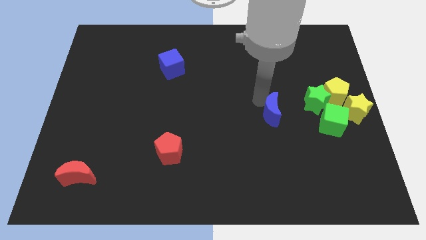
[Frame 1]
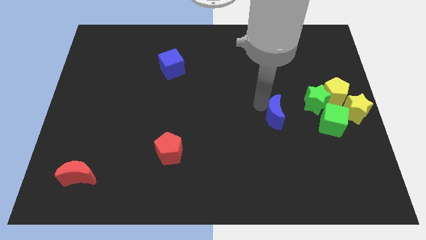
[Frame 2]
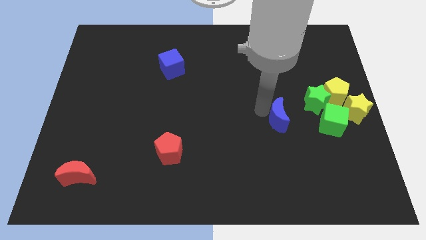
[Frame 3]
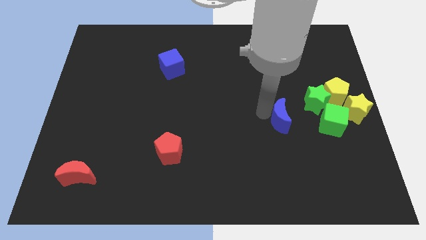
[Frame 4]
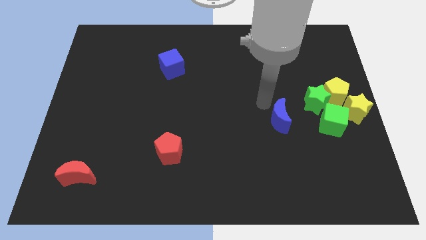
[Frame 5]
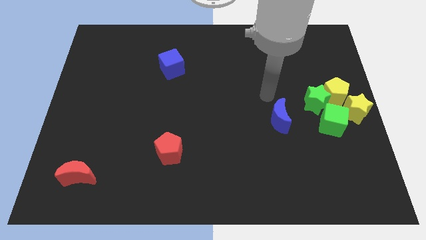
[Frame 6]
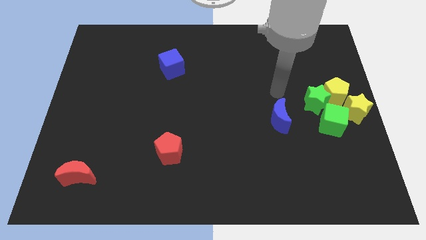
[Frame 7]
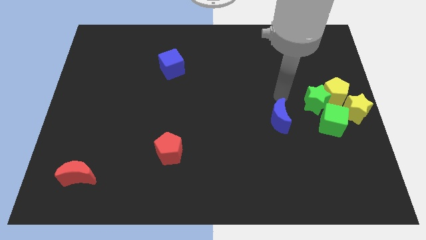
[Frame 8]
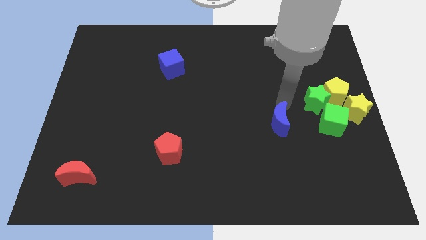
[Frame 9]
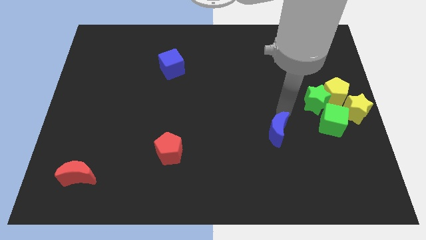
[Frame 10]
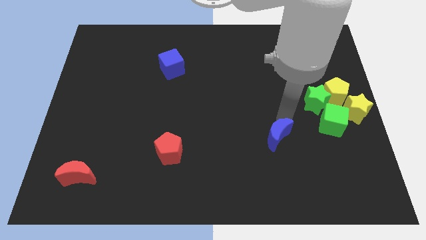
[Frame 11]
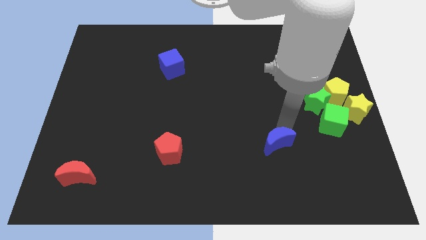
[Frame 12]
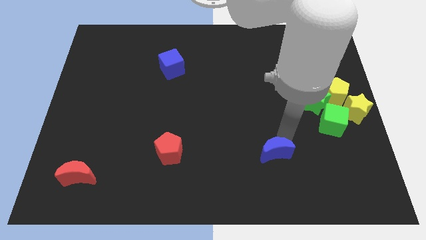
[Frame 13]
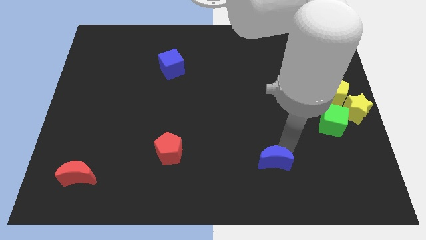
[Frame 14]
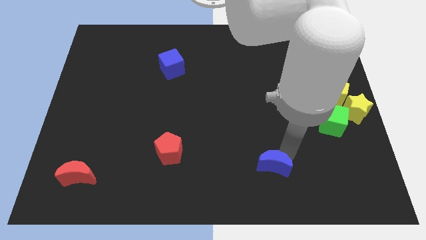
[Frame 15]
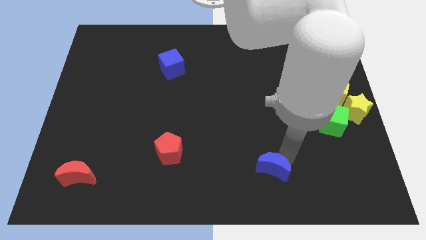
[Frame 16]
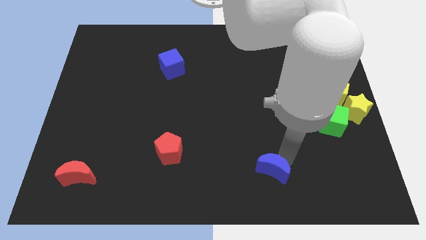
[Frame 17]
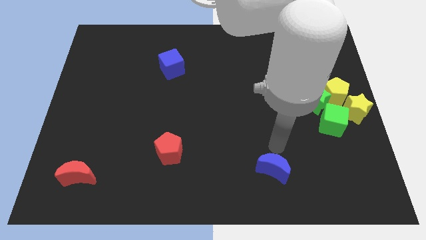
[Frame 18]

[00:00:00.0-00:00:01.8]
slide blue moon to the bottom center

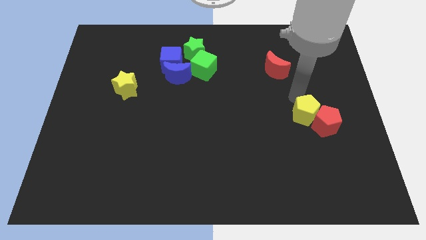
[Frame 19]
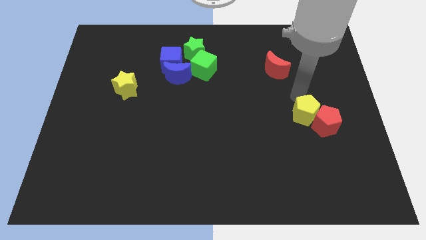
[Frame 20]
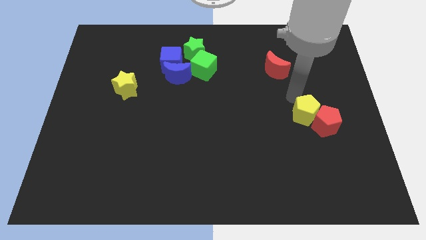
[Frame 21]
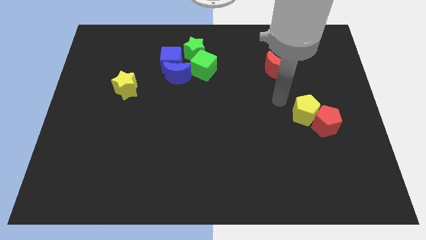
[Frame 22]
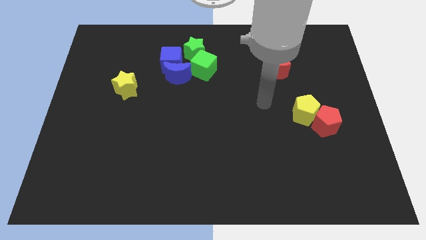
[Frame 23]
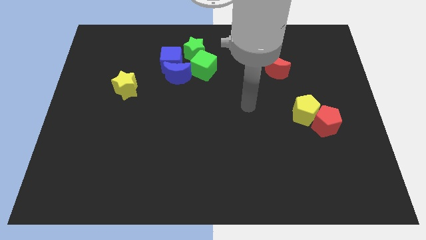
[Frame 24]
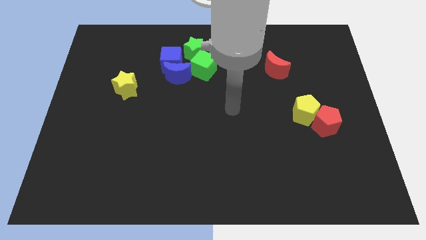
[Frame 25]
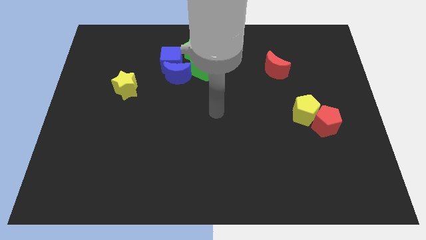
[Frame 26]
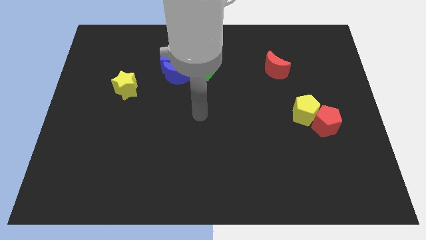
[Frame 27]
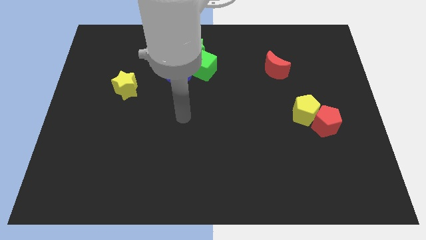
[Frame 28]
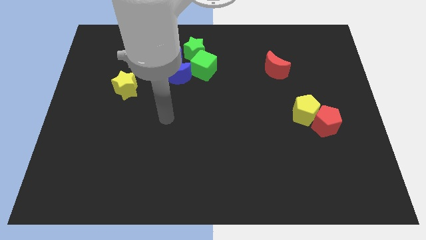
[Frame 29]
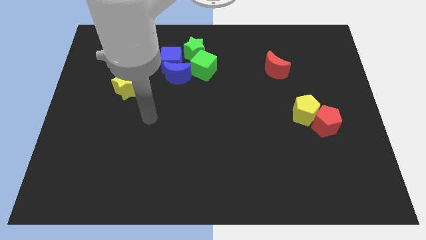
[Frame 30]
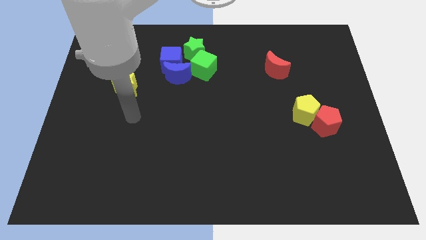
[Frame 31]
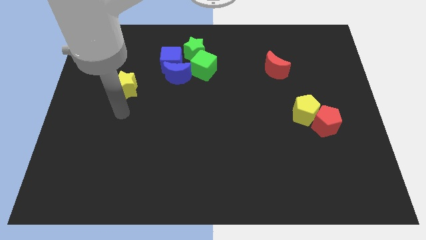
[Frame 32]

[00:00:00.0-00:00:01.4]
move your hand towards the bottom side of the yellow star

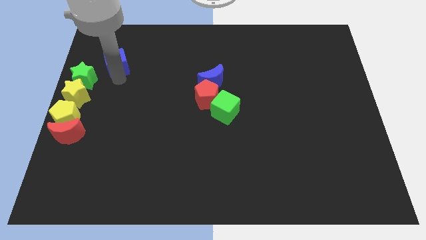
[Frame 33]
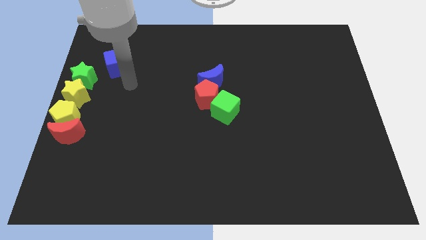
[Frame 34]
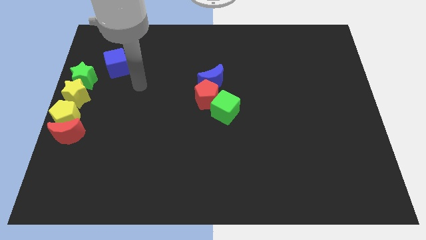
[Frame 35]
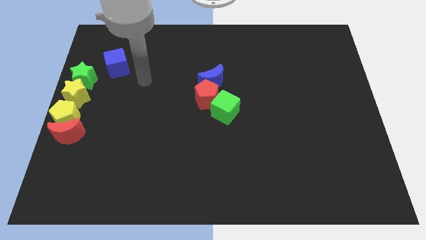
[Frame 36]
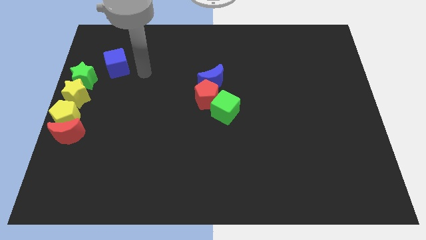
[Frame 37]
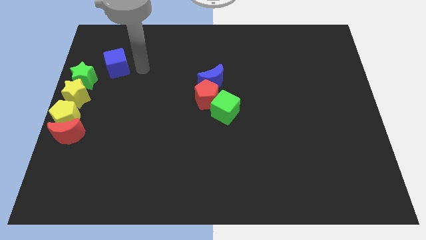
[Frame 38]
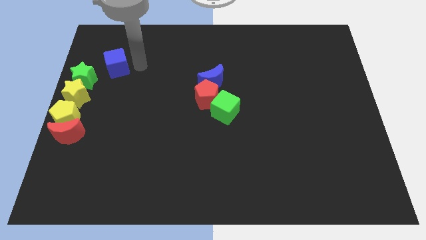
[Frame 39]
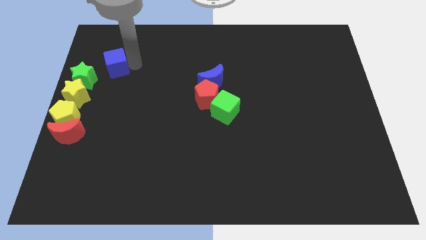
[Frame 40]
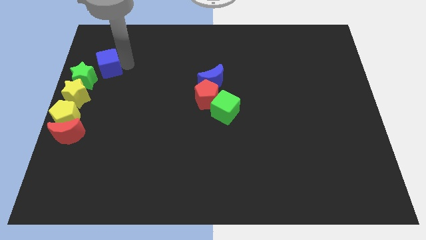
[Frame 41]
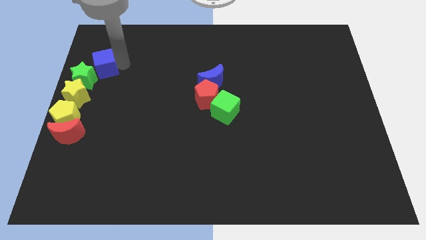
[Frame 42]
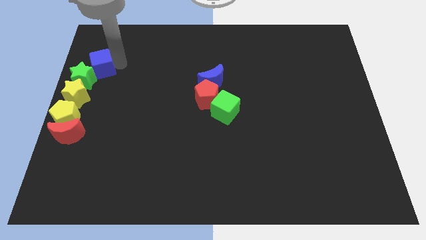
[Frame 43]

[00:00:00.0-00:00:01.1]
place the blue cube on the top right of the green star

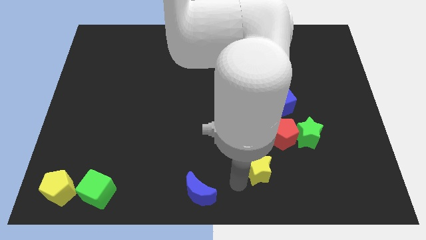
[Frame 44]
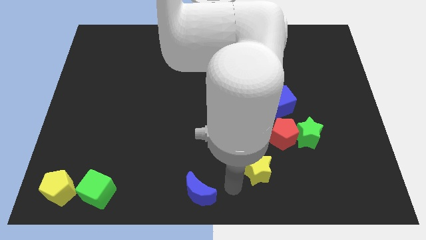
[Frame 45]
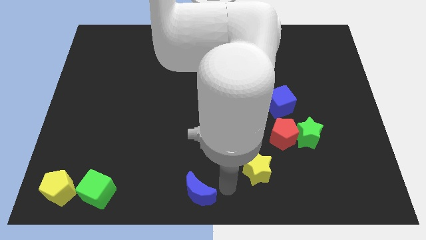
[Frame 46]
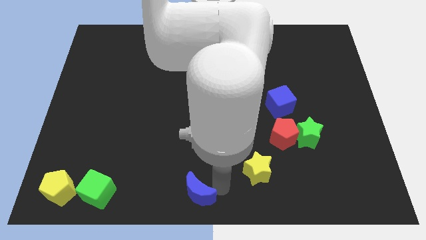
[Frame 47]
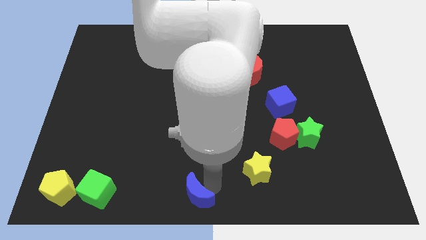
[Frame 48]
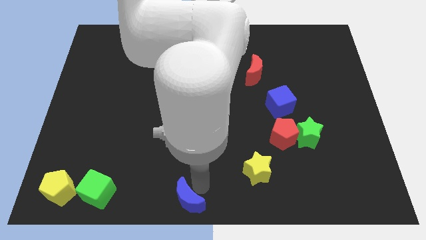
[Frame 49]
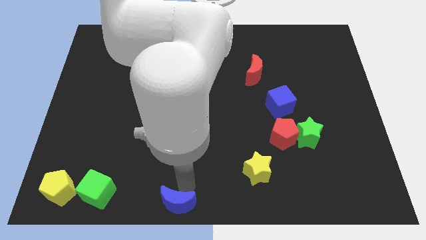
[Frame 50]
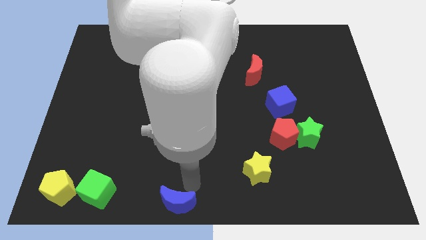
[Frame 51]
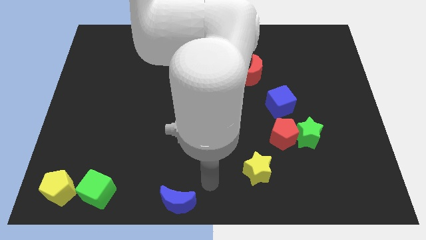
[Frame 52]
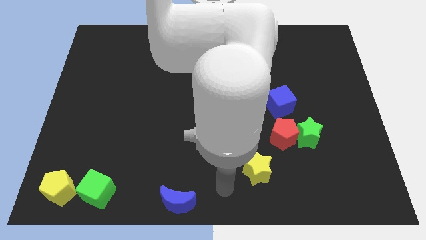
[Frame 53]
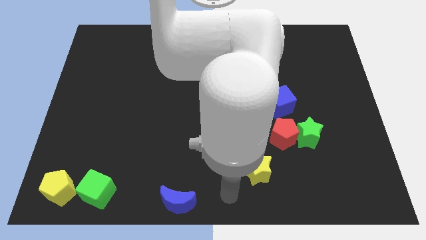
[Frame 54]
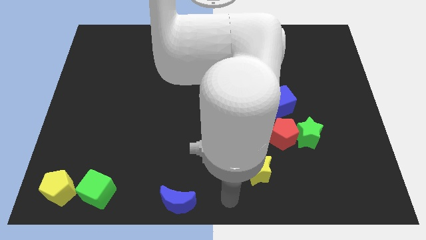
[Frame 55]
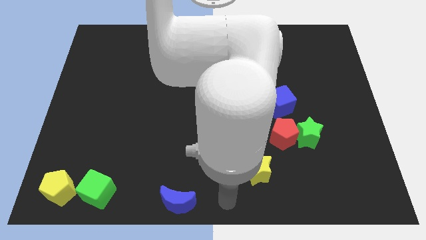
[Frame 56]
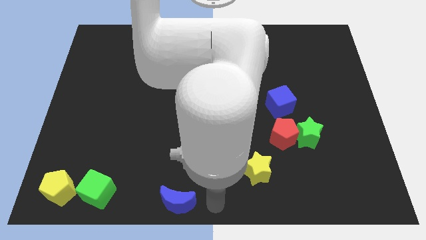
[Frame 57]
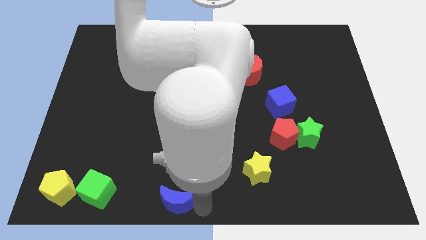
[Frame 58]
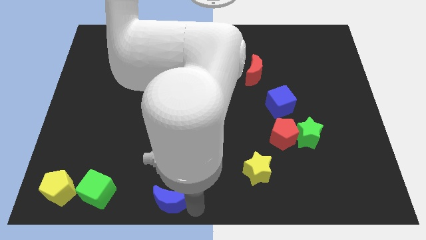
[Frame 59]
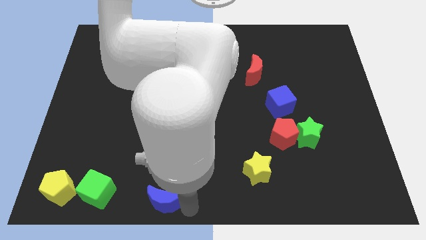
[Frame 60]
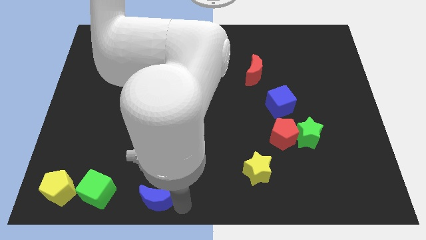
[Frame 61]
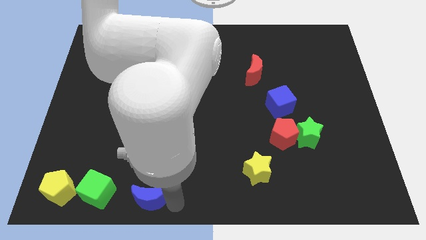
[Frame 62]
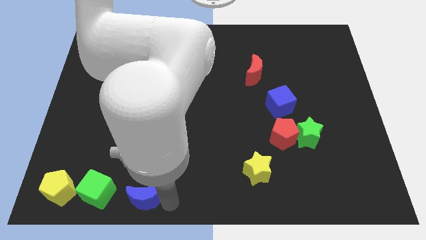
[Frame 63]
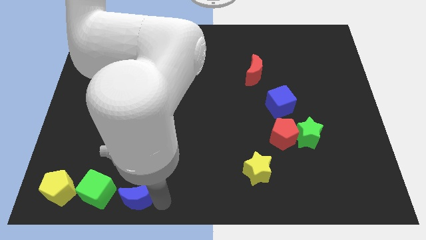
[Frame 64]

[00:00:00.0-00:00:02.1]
move blue crescent towards the green cube

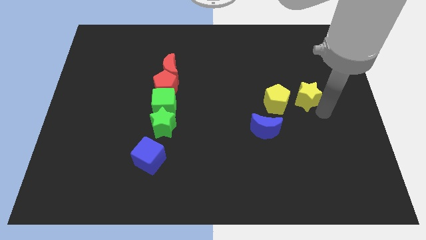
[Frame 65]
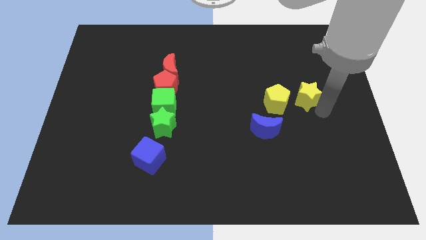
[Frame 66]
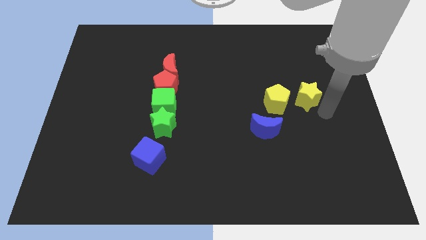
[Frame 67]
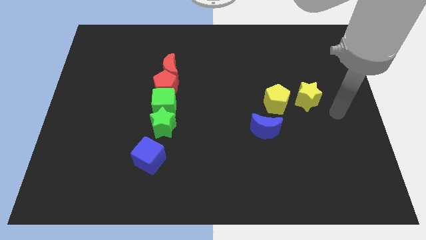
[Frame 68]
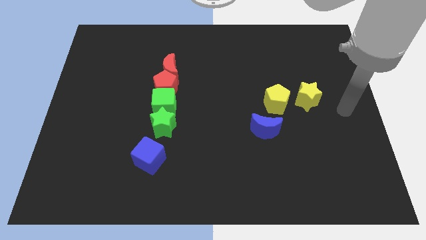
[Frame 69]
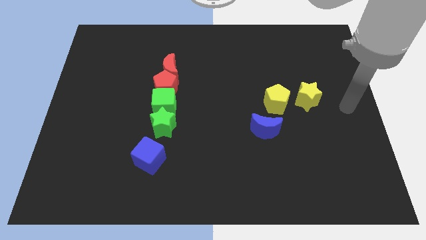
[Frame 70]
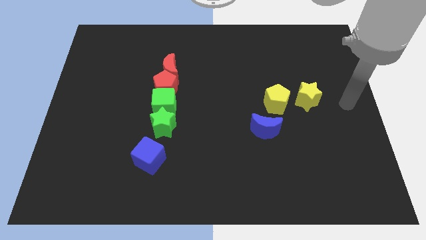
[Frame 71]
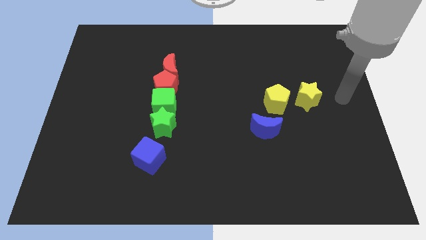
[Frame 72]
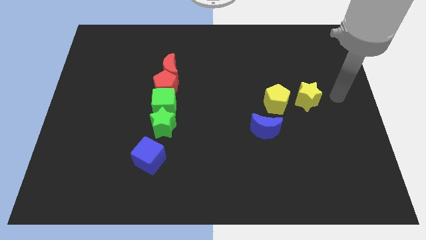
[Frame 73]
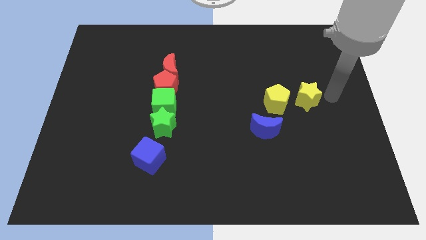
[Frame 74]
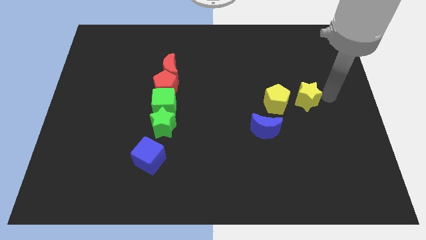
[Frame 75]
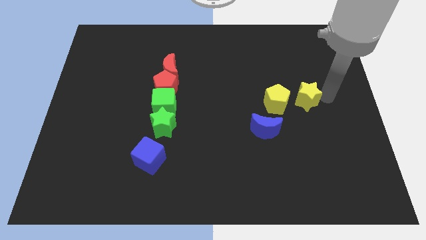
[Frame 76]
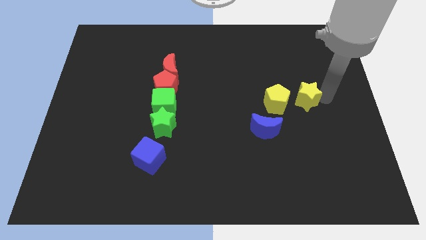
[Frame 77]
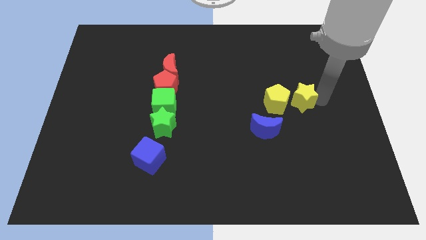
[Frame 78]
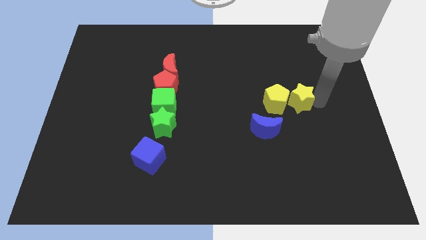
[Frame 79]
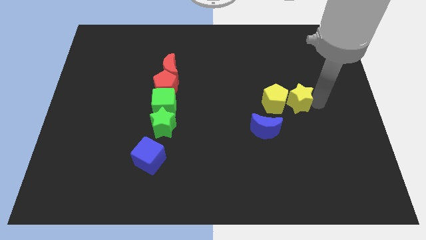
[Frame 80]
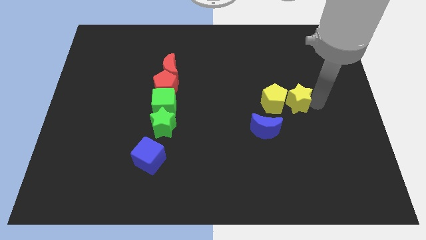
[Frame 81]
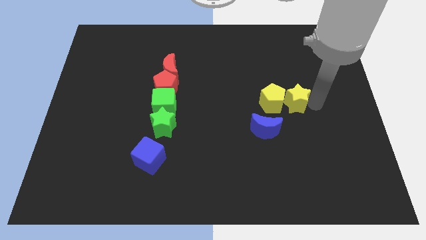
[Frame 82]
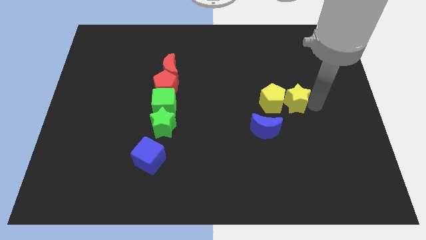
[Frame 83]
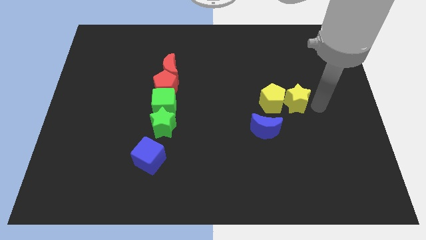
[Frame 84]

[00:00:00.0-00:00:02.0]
push the yellow star into the yellow pentagon

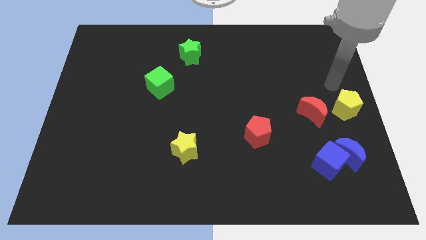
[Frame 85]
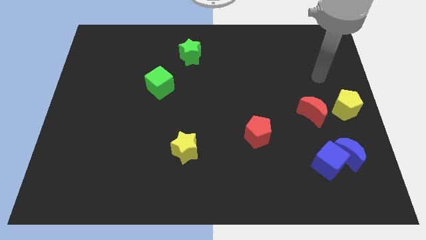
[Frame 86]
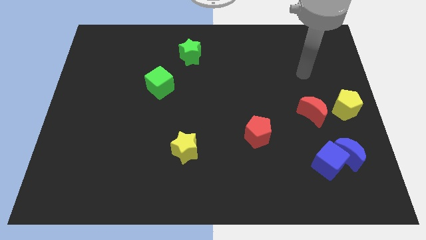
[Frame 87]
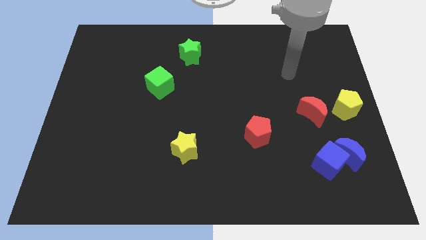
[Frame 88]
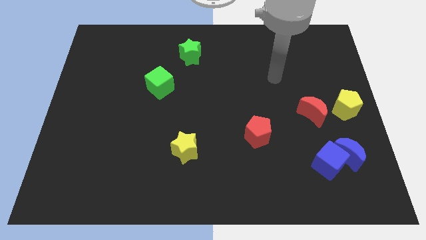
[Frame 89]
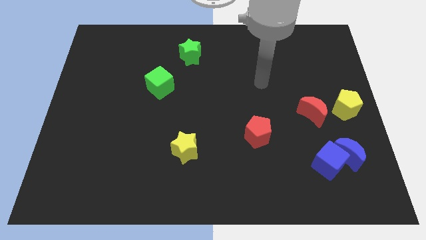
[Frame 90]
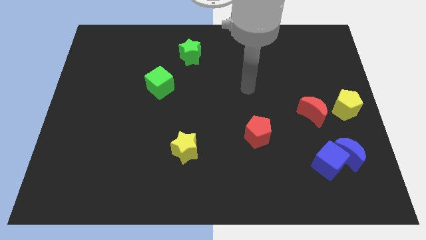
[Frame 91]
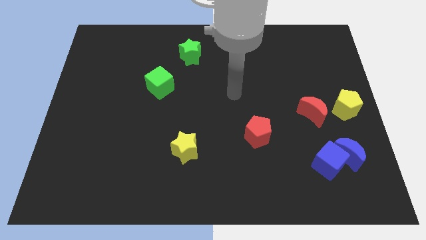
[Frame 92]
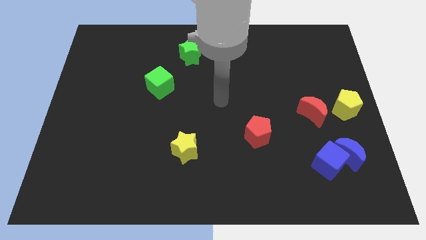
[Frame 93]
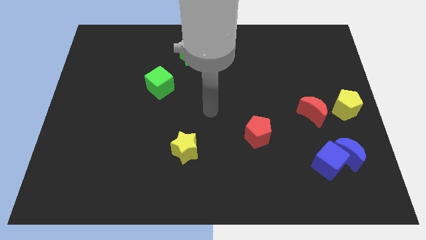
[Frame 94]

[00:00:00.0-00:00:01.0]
move your arm from the yellow pentagon
